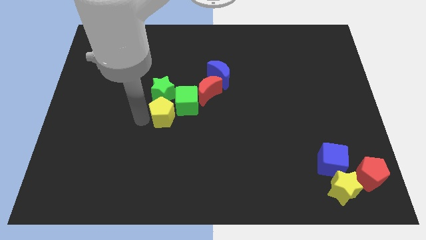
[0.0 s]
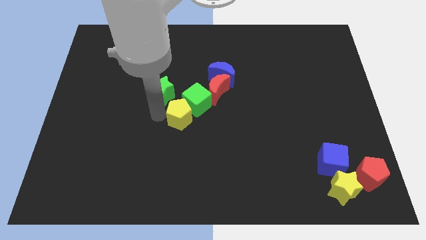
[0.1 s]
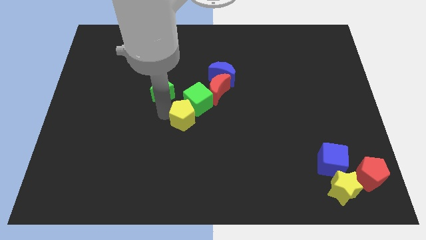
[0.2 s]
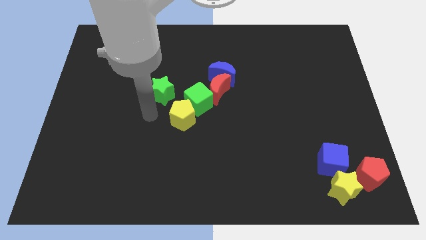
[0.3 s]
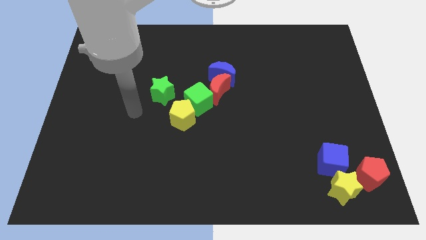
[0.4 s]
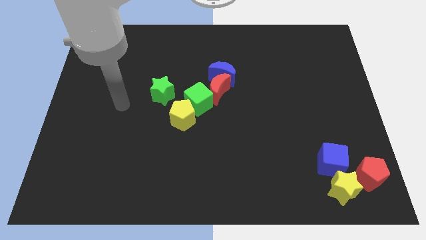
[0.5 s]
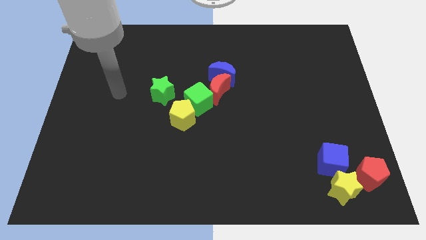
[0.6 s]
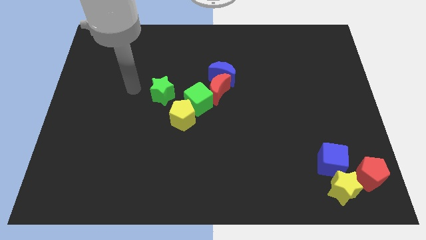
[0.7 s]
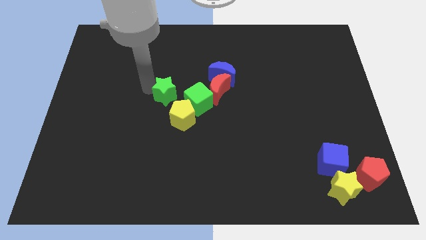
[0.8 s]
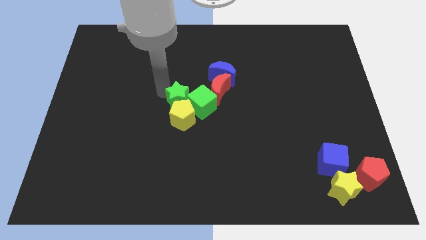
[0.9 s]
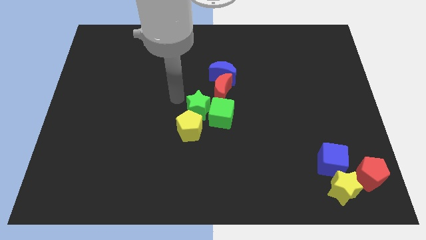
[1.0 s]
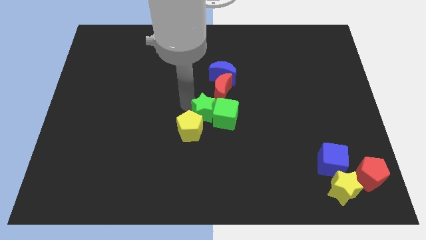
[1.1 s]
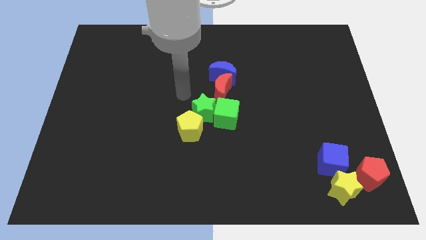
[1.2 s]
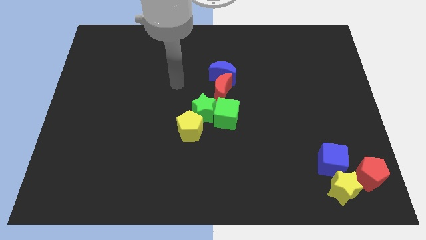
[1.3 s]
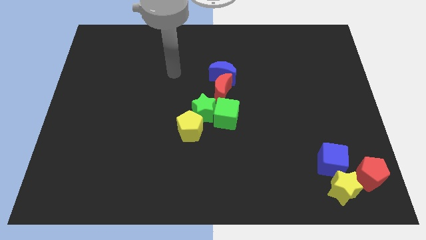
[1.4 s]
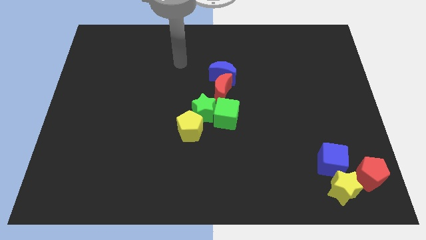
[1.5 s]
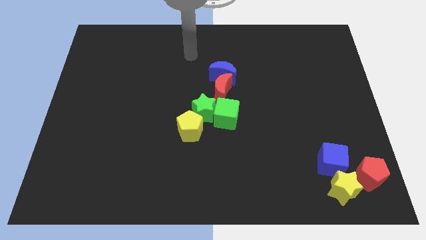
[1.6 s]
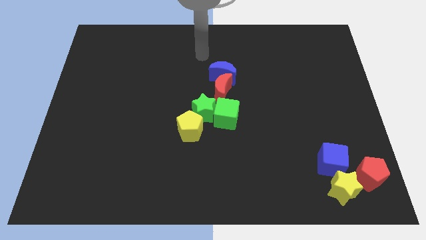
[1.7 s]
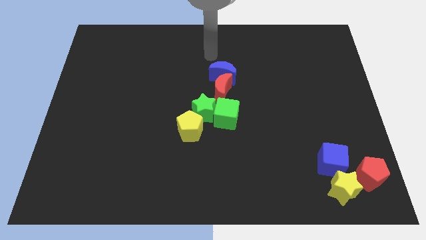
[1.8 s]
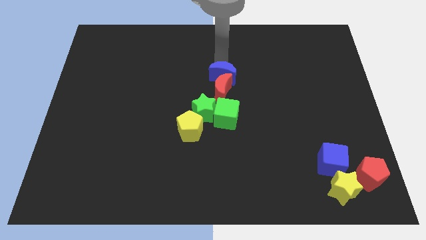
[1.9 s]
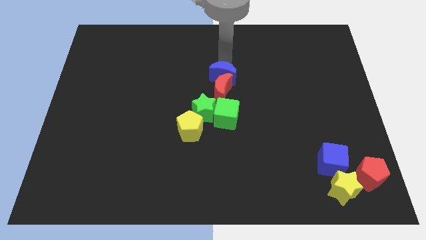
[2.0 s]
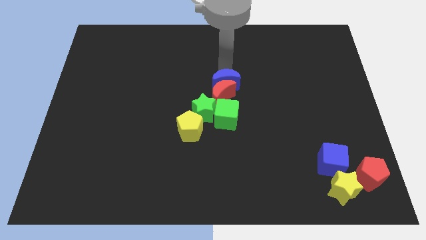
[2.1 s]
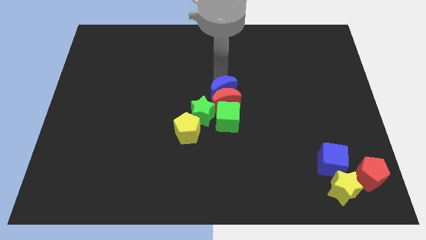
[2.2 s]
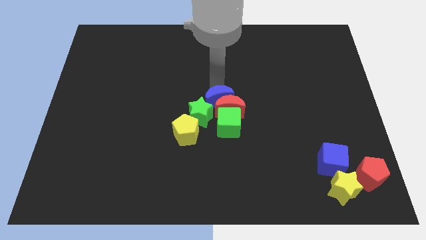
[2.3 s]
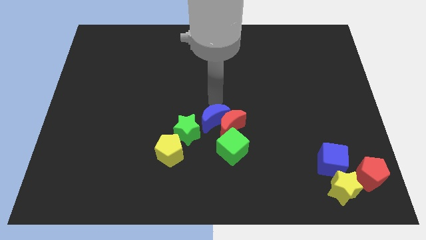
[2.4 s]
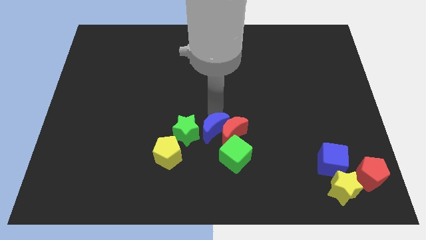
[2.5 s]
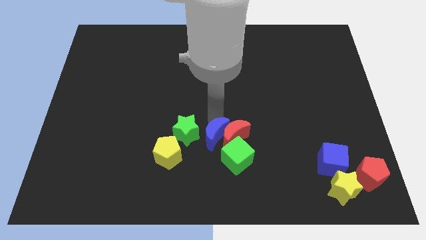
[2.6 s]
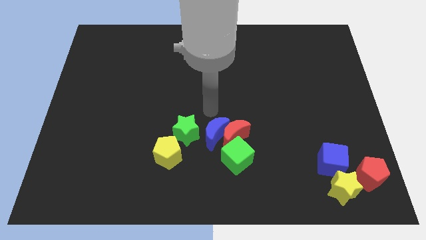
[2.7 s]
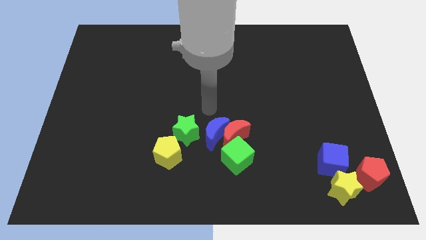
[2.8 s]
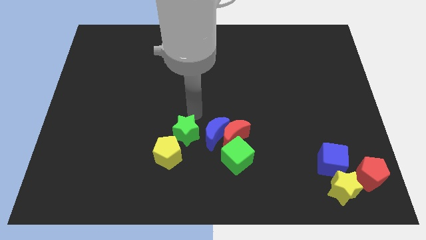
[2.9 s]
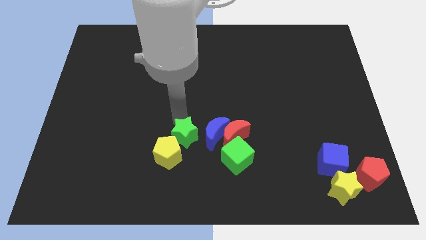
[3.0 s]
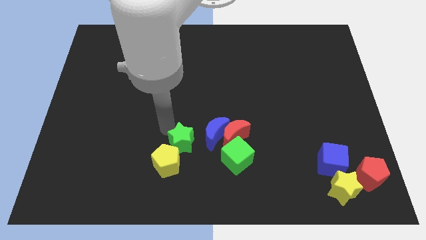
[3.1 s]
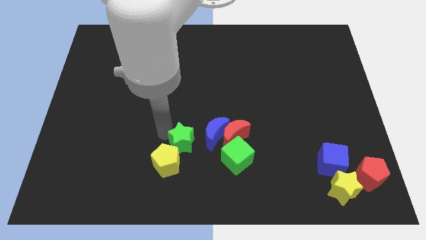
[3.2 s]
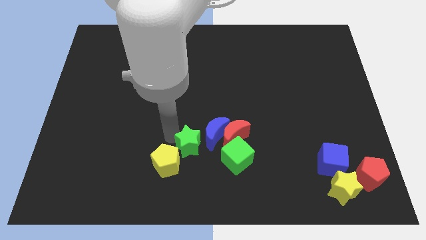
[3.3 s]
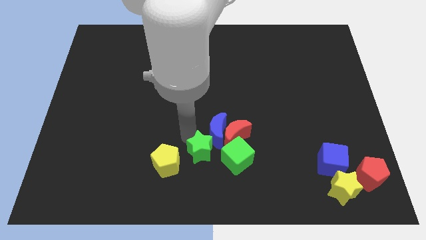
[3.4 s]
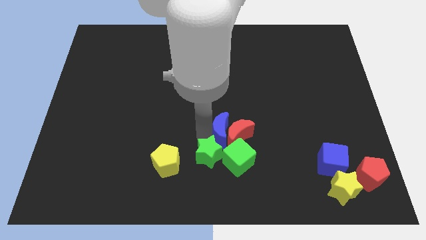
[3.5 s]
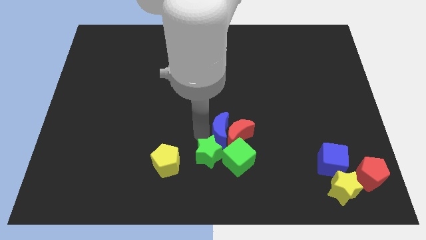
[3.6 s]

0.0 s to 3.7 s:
push the group of blocks with the arm

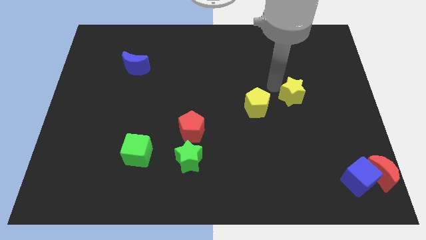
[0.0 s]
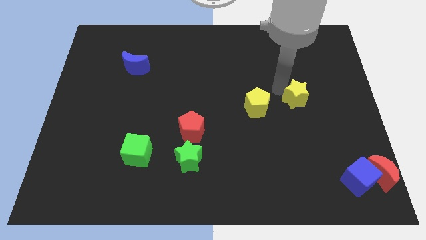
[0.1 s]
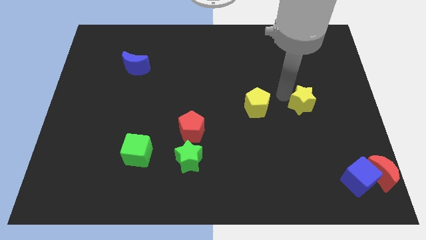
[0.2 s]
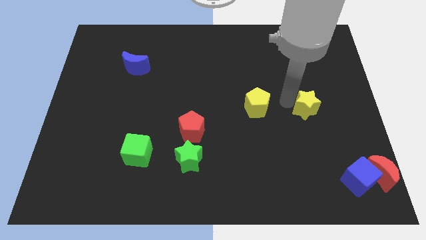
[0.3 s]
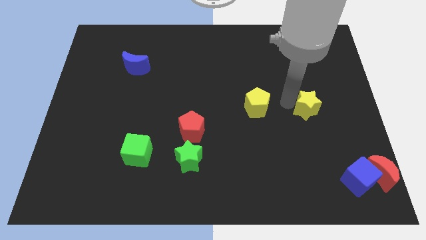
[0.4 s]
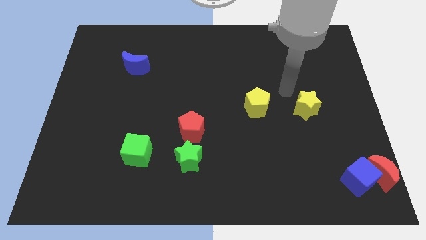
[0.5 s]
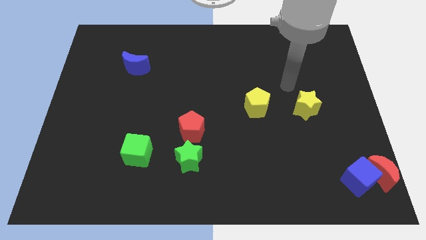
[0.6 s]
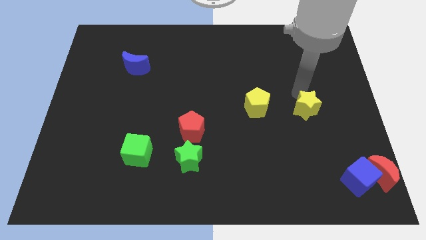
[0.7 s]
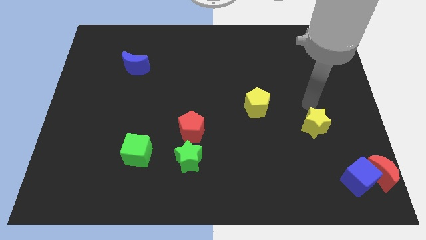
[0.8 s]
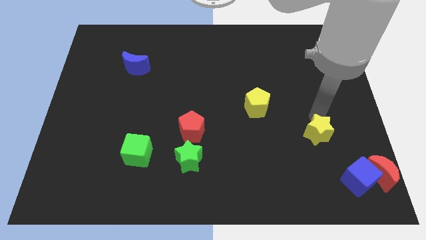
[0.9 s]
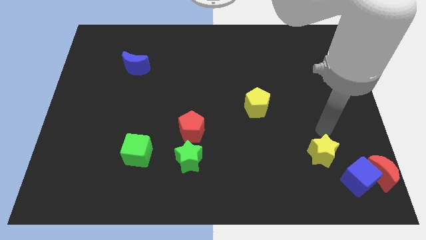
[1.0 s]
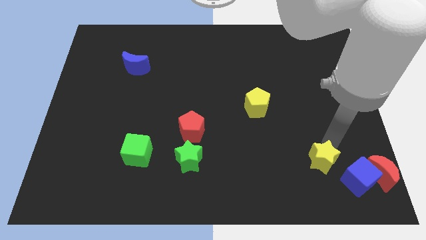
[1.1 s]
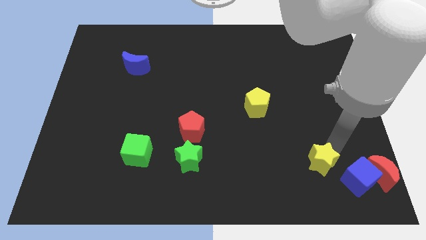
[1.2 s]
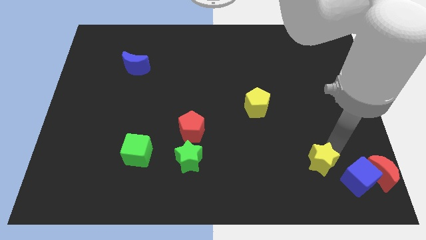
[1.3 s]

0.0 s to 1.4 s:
move the yellow star towards the blue cube

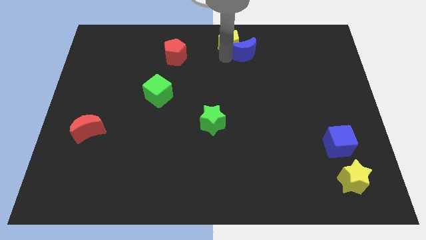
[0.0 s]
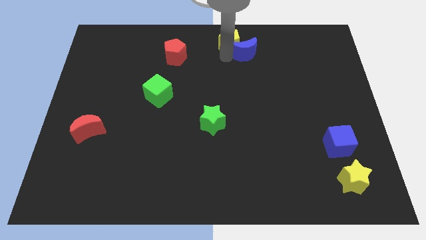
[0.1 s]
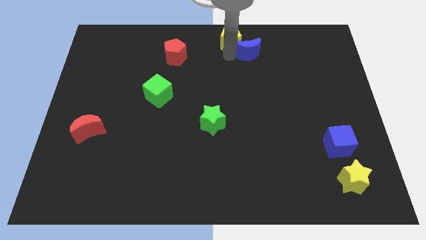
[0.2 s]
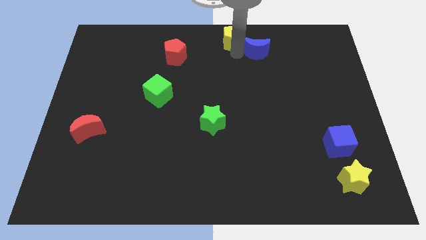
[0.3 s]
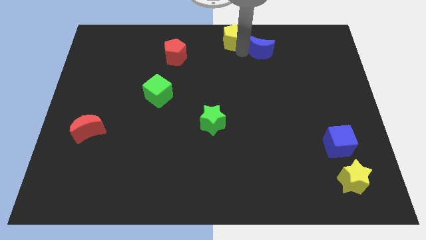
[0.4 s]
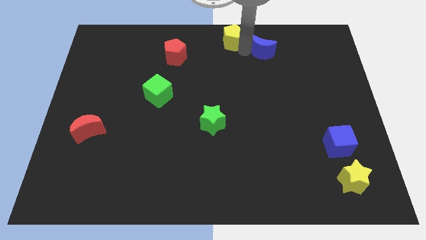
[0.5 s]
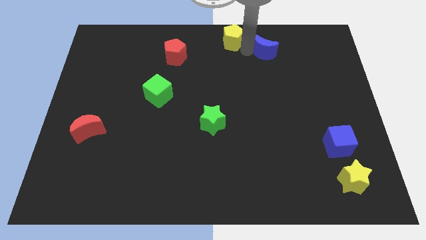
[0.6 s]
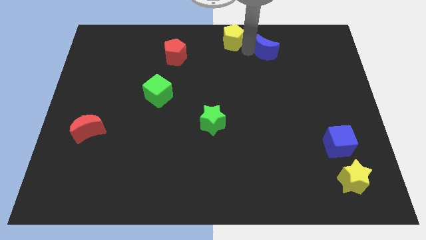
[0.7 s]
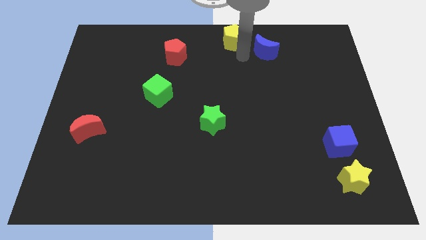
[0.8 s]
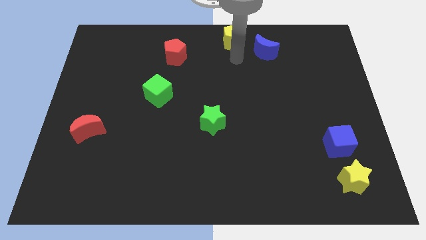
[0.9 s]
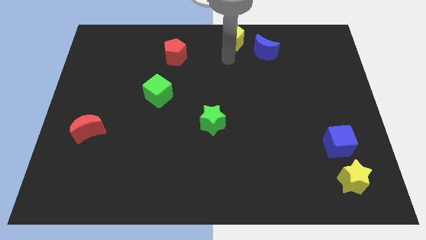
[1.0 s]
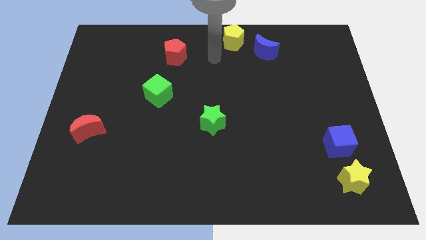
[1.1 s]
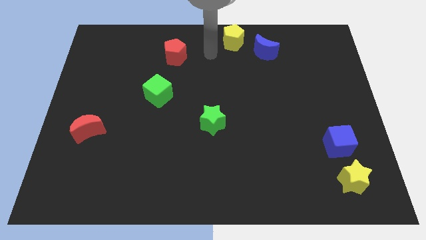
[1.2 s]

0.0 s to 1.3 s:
move the blue crescent slightly to the right

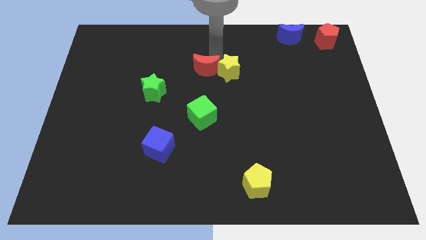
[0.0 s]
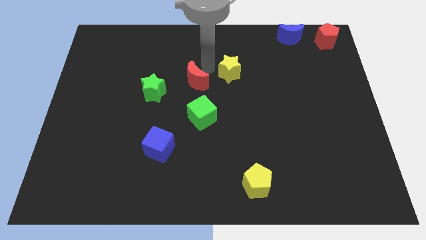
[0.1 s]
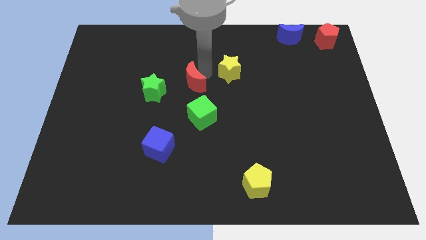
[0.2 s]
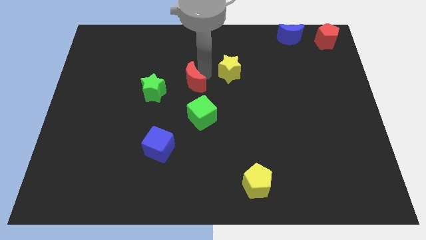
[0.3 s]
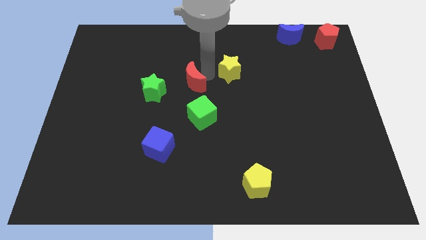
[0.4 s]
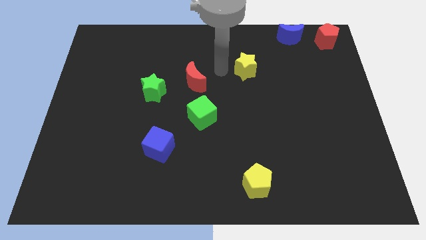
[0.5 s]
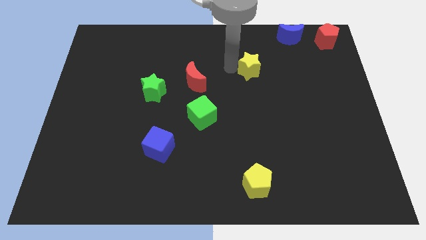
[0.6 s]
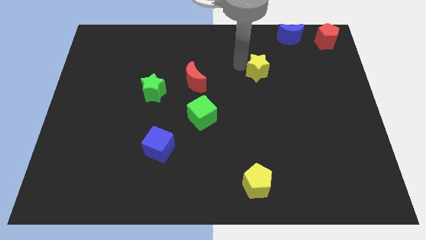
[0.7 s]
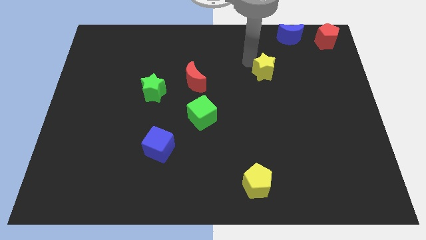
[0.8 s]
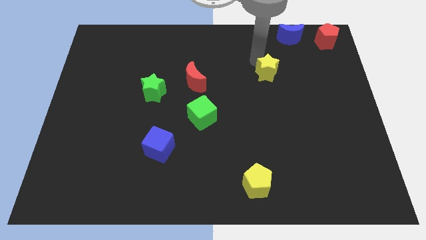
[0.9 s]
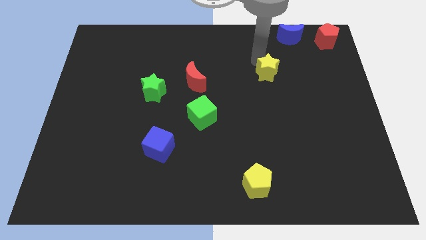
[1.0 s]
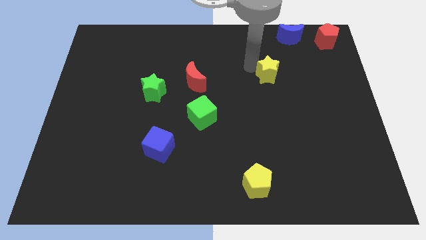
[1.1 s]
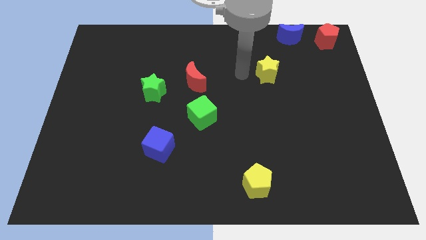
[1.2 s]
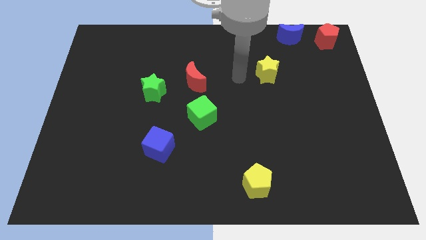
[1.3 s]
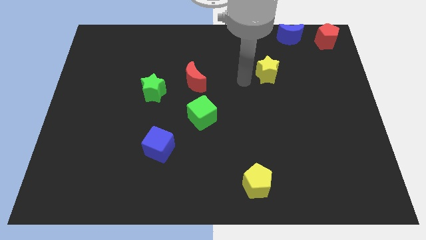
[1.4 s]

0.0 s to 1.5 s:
separate the yellow star and red moon

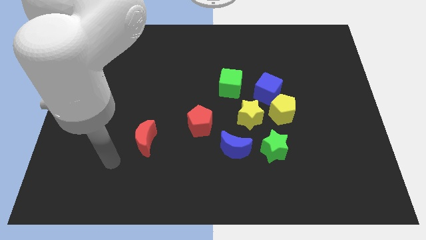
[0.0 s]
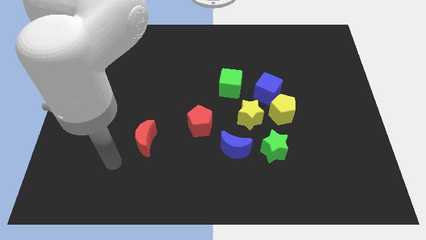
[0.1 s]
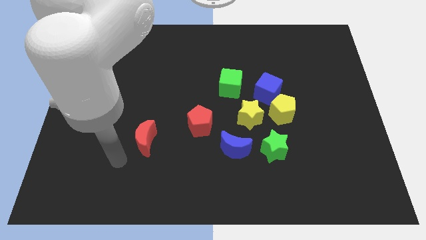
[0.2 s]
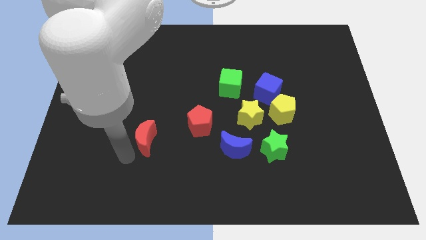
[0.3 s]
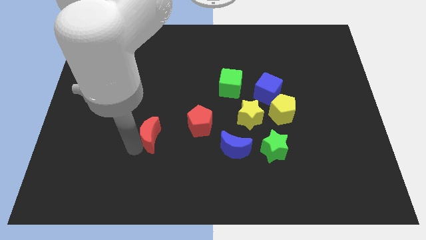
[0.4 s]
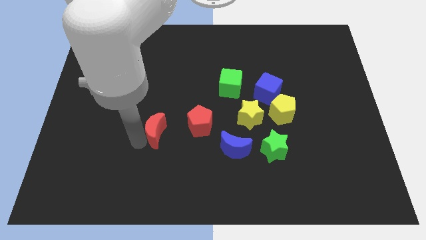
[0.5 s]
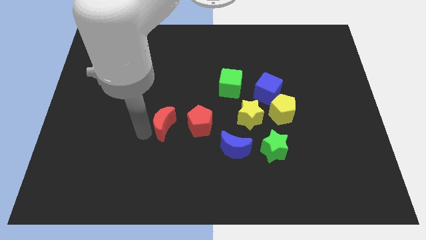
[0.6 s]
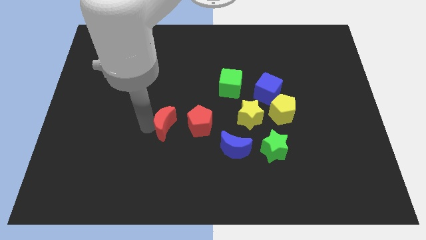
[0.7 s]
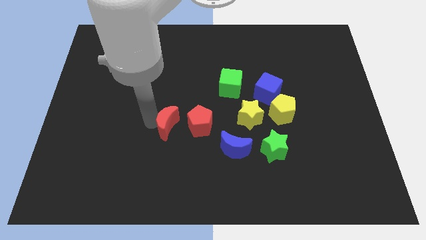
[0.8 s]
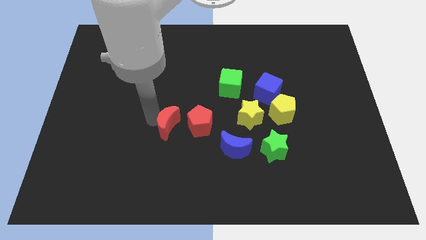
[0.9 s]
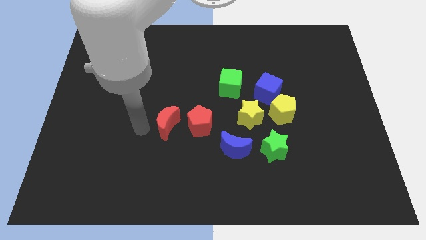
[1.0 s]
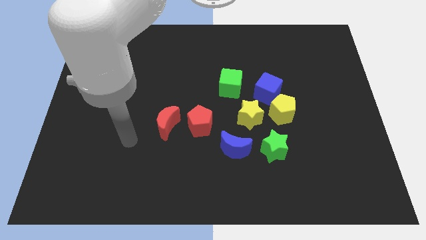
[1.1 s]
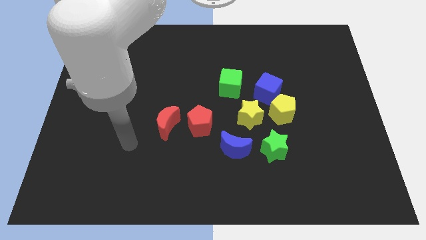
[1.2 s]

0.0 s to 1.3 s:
push the red crescent to the left of the red pentagon
